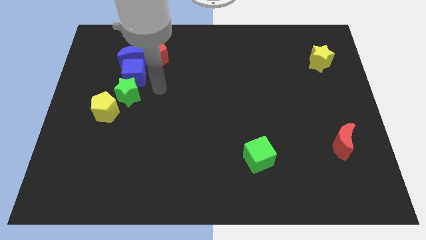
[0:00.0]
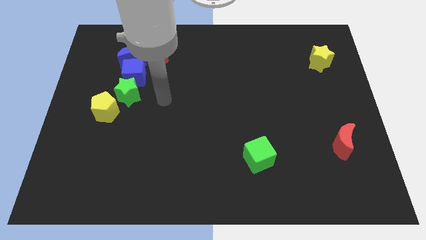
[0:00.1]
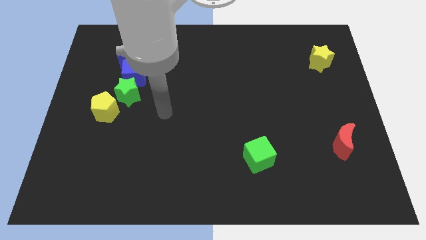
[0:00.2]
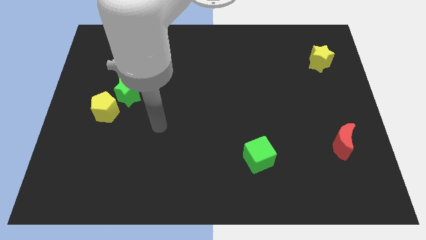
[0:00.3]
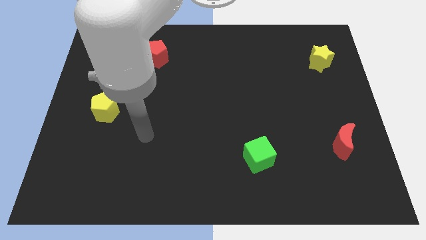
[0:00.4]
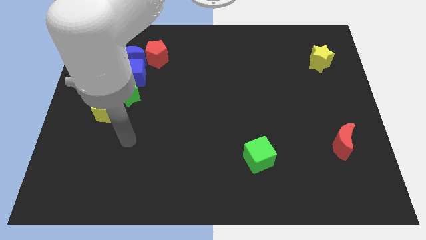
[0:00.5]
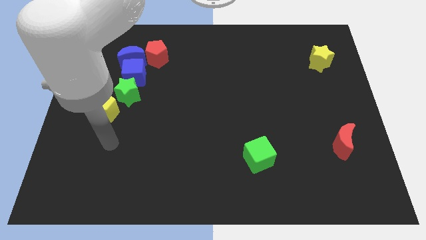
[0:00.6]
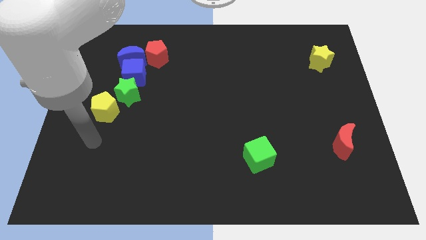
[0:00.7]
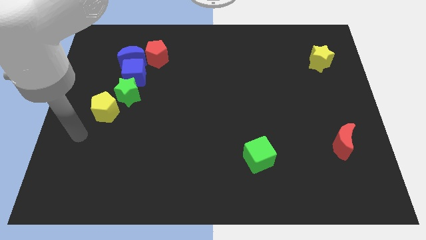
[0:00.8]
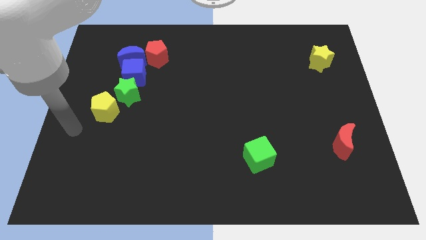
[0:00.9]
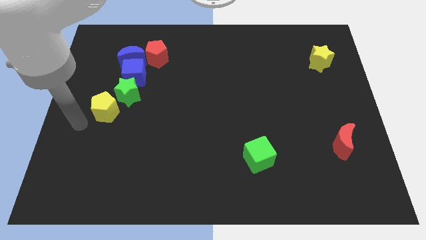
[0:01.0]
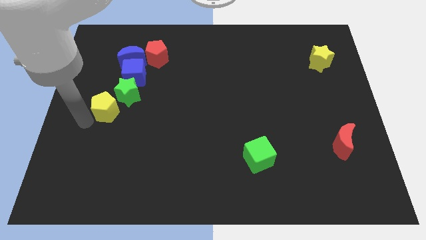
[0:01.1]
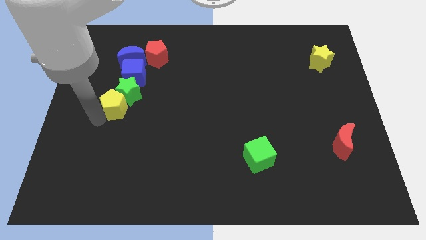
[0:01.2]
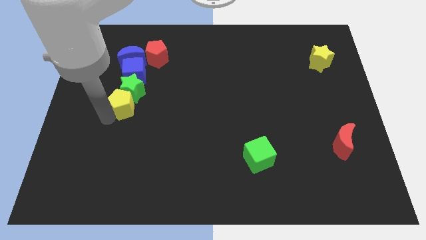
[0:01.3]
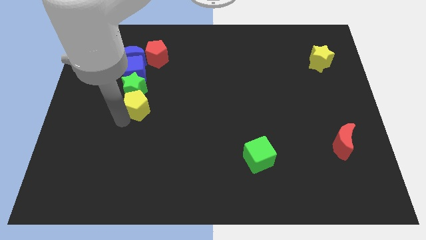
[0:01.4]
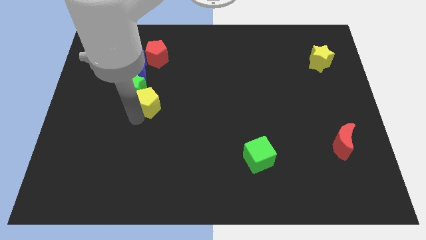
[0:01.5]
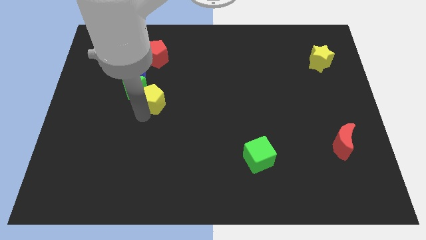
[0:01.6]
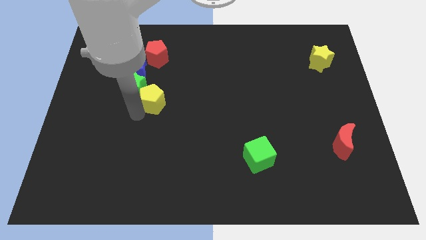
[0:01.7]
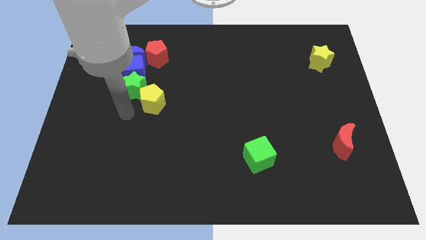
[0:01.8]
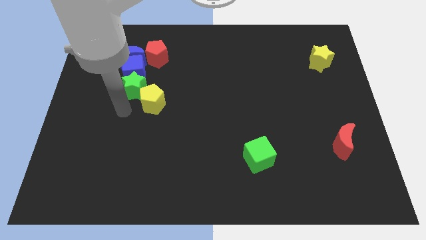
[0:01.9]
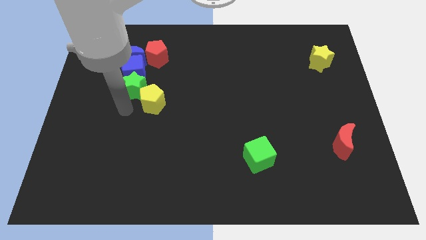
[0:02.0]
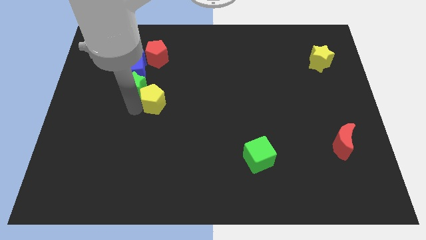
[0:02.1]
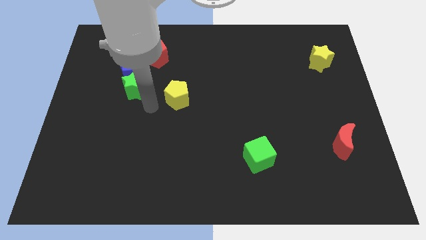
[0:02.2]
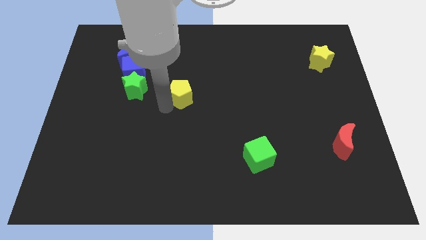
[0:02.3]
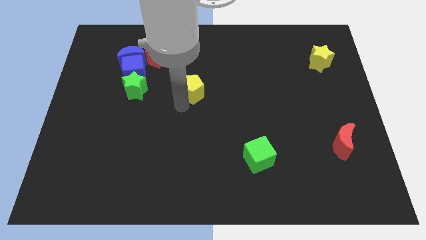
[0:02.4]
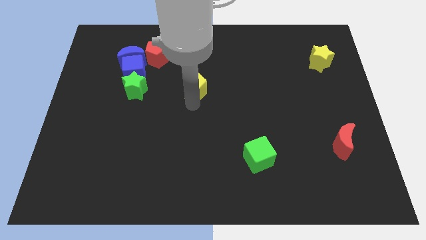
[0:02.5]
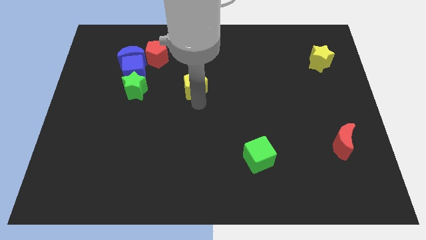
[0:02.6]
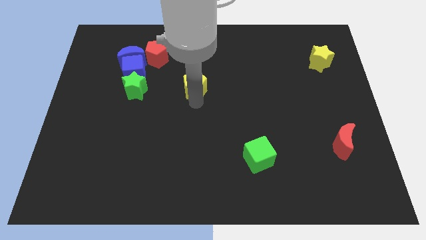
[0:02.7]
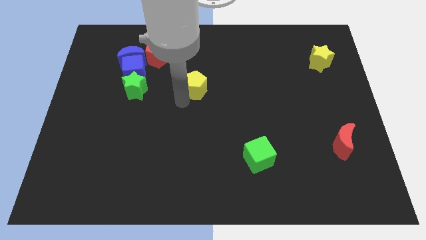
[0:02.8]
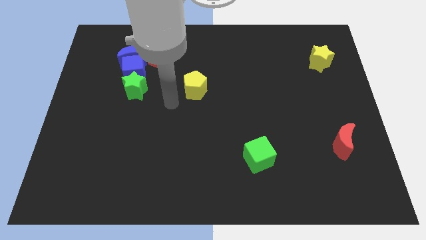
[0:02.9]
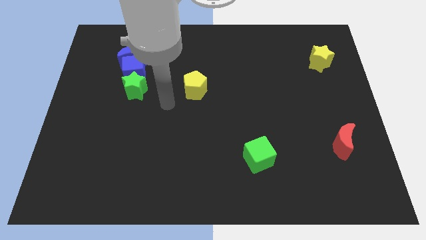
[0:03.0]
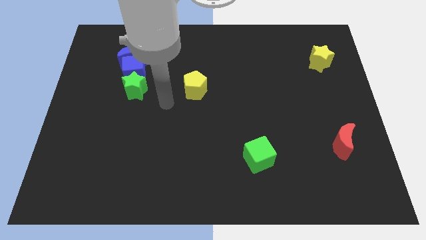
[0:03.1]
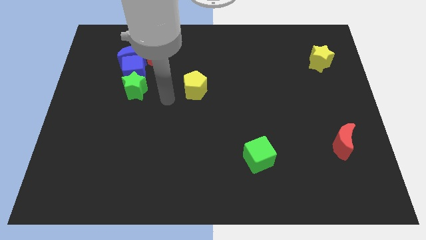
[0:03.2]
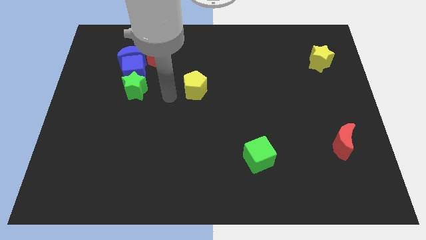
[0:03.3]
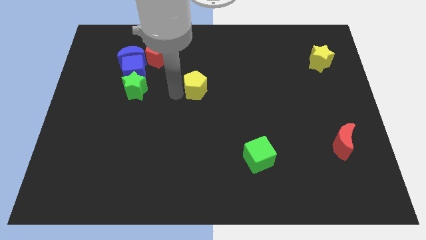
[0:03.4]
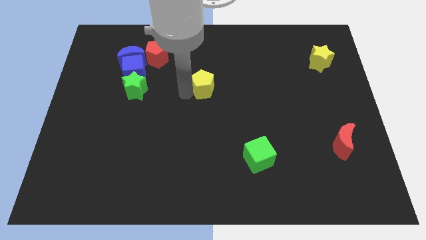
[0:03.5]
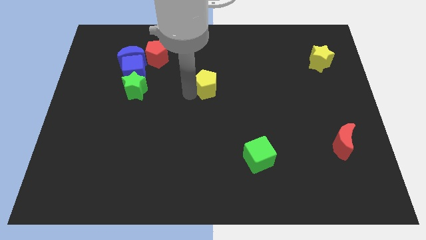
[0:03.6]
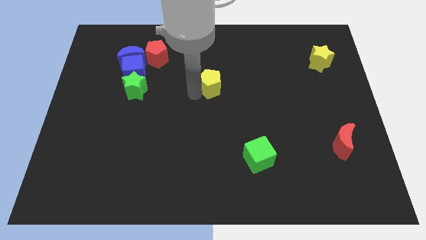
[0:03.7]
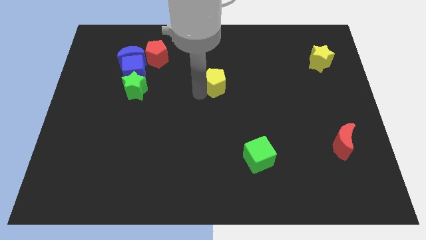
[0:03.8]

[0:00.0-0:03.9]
move the yellow pentagon to the right of the green star

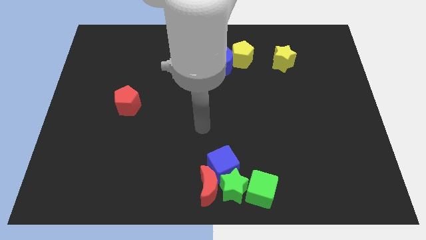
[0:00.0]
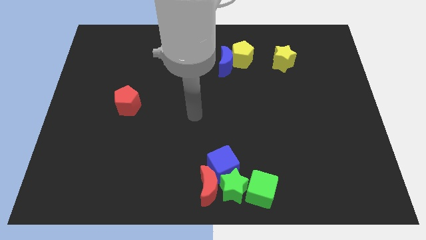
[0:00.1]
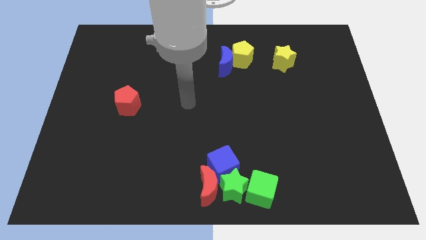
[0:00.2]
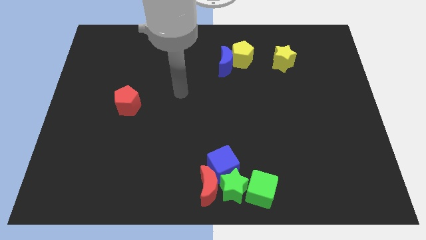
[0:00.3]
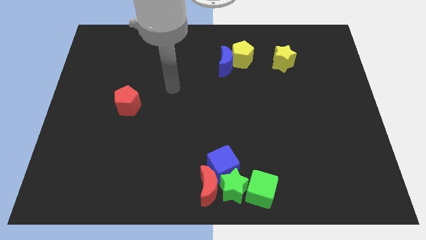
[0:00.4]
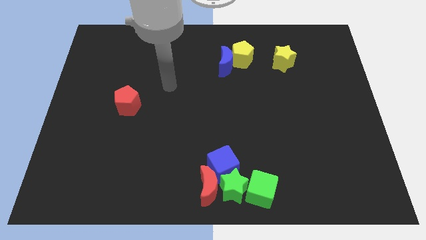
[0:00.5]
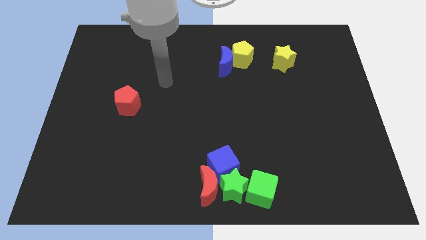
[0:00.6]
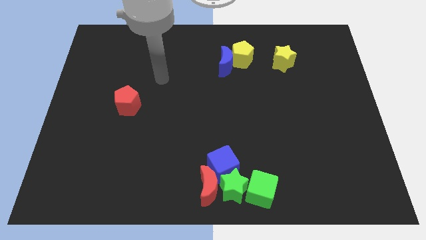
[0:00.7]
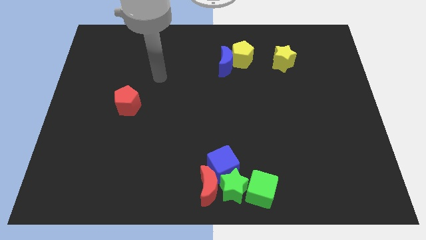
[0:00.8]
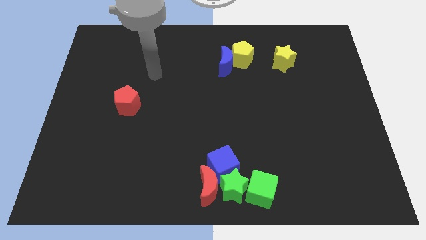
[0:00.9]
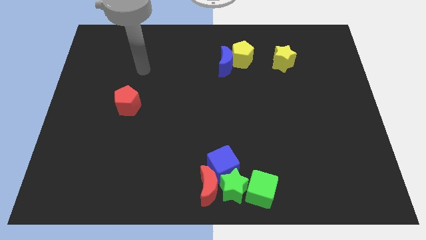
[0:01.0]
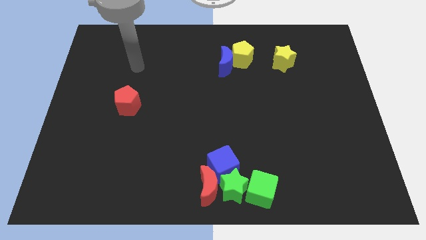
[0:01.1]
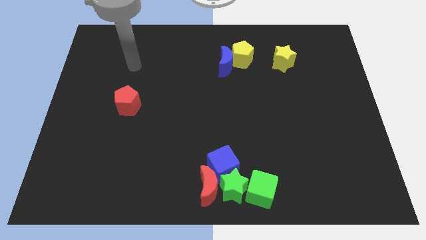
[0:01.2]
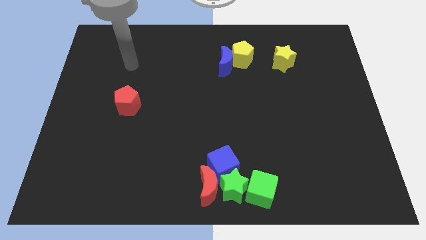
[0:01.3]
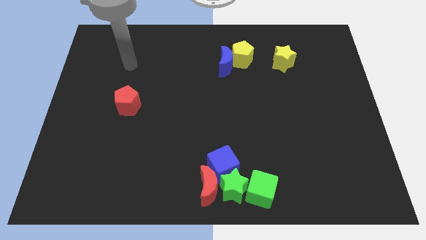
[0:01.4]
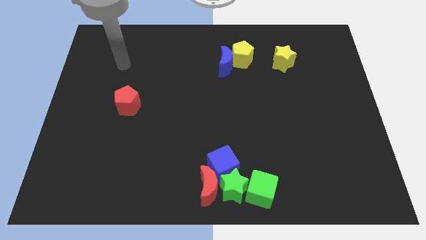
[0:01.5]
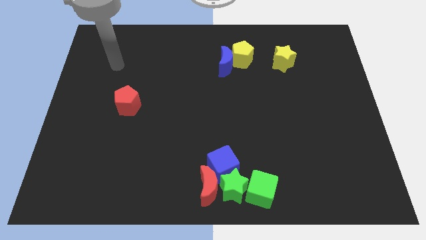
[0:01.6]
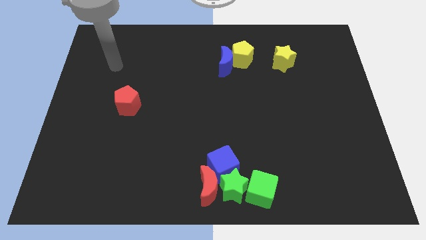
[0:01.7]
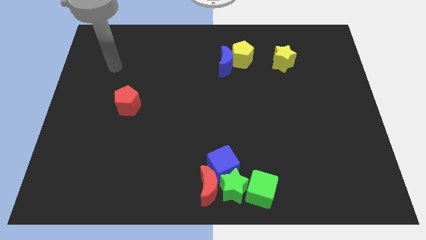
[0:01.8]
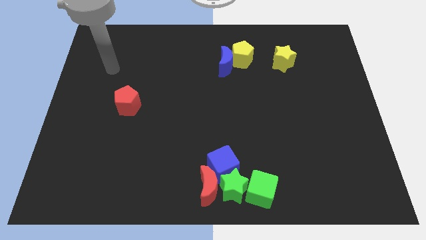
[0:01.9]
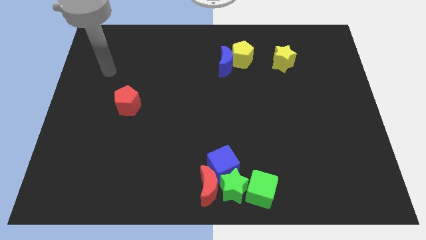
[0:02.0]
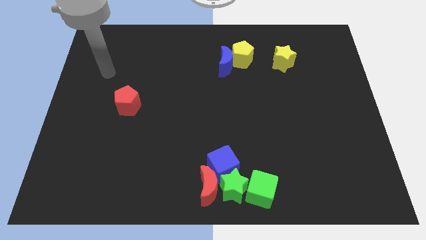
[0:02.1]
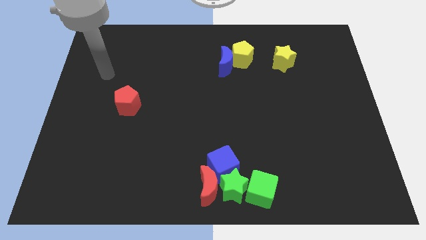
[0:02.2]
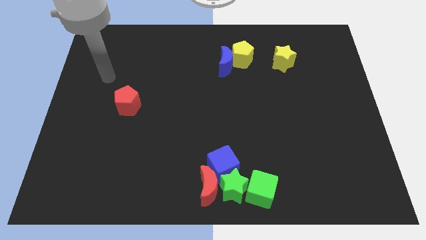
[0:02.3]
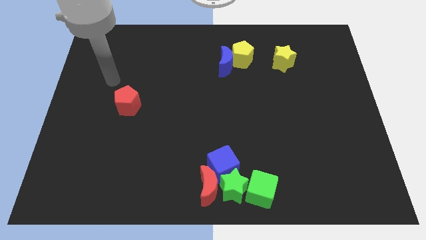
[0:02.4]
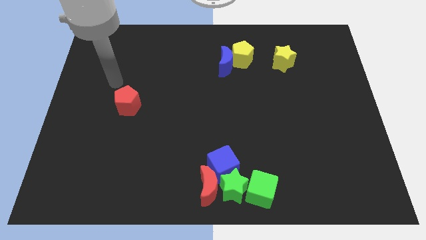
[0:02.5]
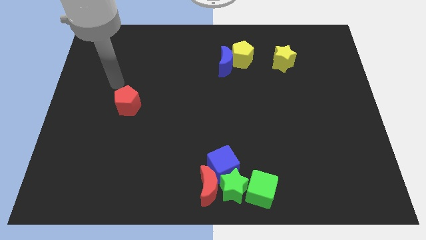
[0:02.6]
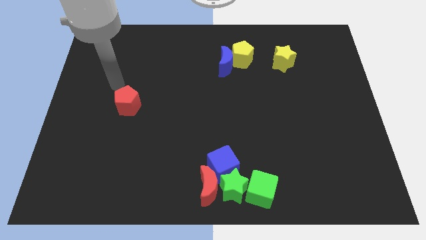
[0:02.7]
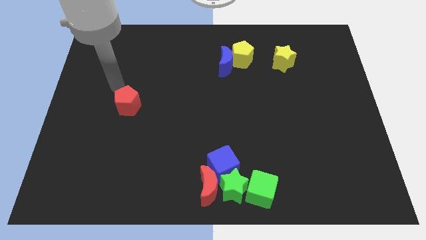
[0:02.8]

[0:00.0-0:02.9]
go near the red pentagon

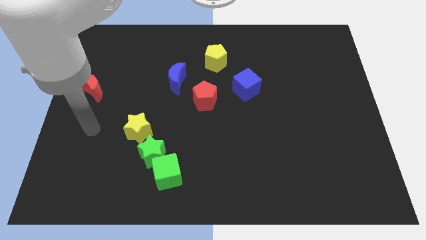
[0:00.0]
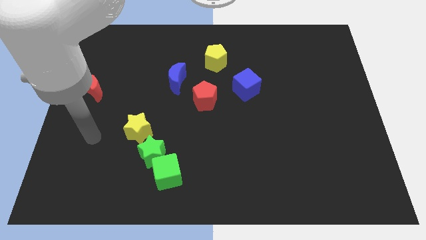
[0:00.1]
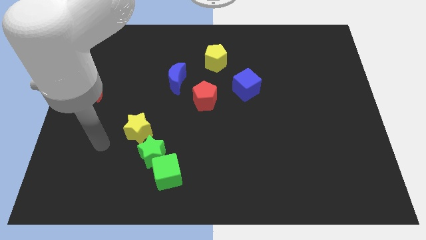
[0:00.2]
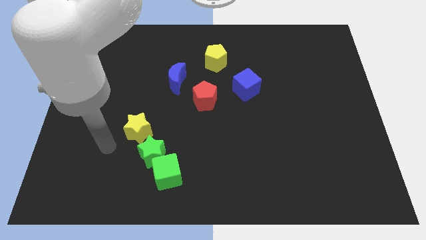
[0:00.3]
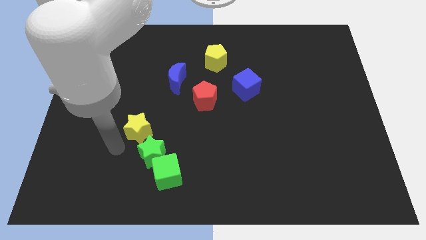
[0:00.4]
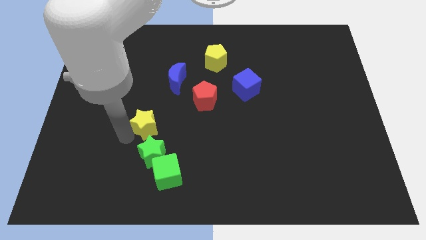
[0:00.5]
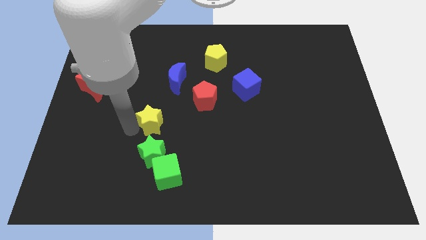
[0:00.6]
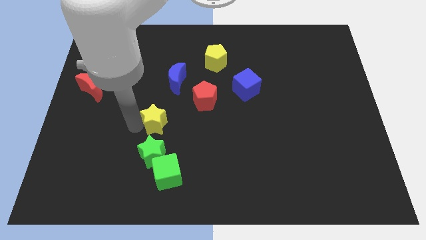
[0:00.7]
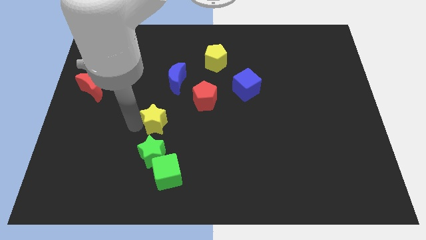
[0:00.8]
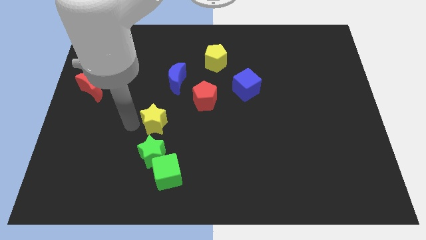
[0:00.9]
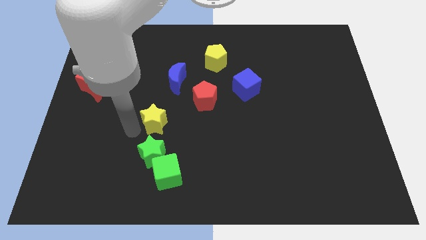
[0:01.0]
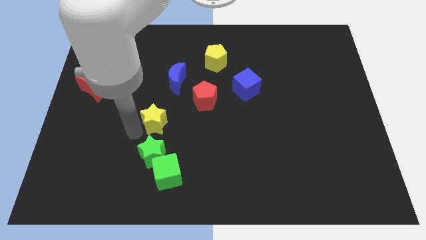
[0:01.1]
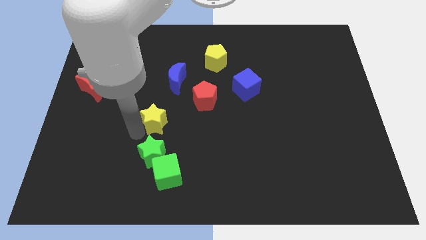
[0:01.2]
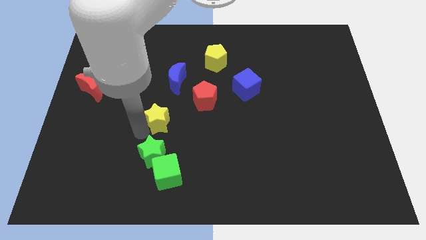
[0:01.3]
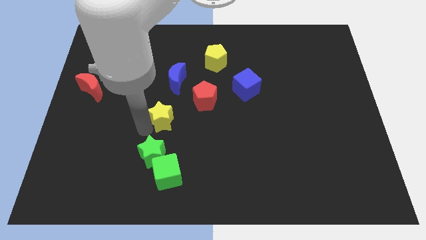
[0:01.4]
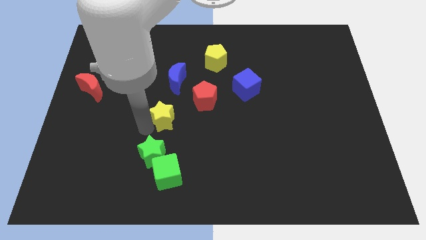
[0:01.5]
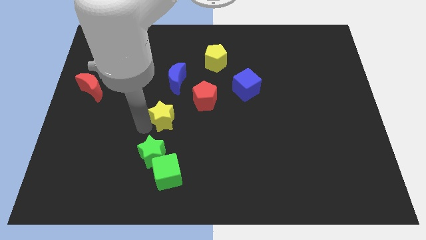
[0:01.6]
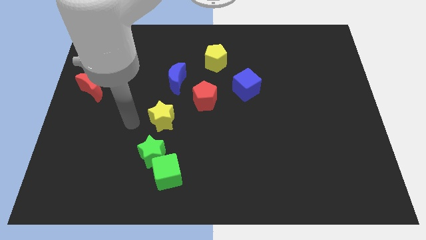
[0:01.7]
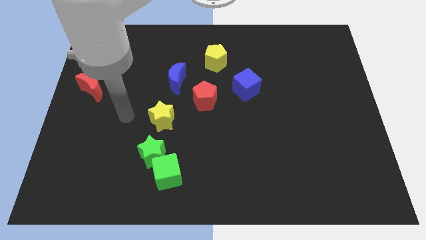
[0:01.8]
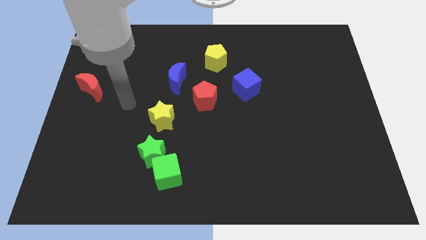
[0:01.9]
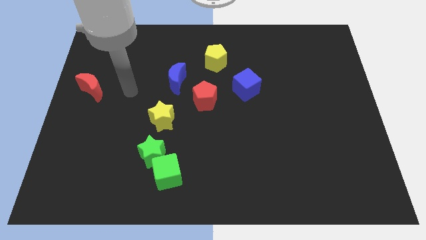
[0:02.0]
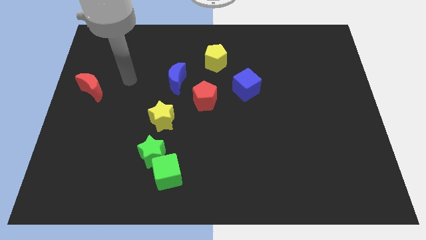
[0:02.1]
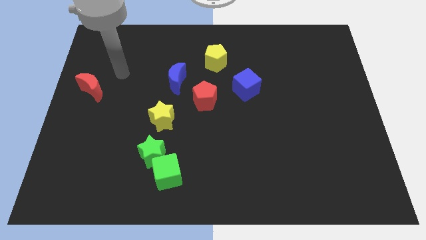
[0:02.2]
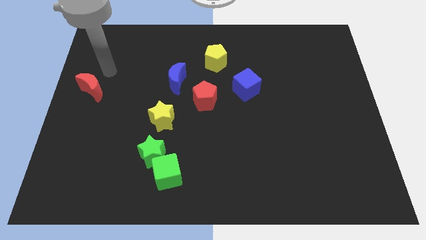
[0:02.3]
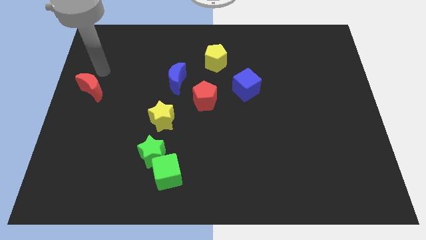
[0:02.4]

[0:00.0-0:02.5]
put yellow star vertically below the blue moon
